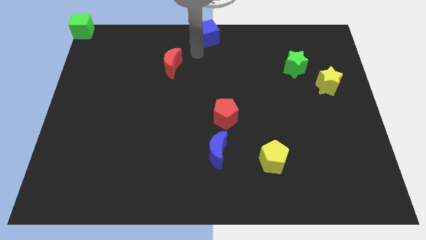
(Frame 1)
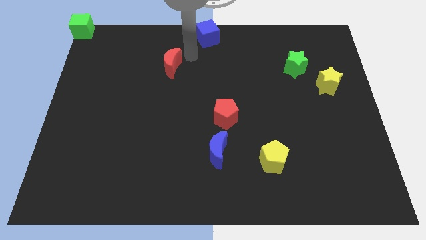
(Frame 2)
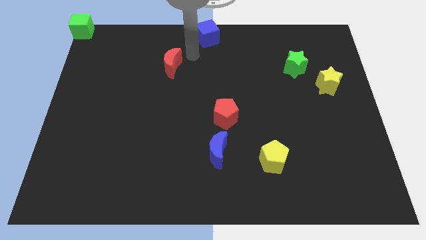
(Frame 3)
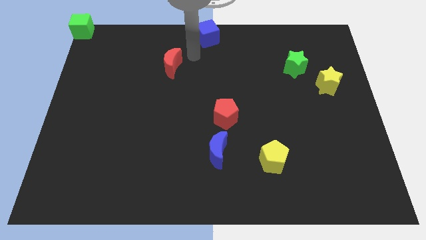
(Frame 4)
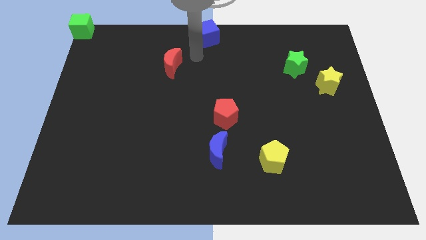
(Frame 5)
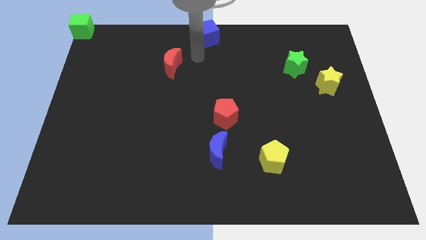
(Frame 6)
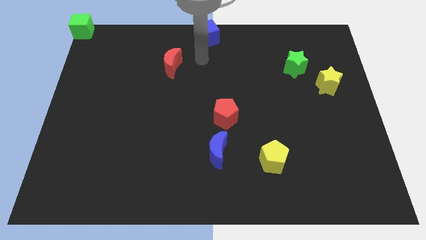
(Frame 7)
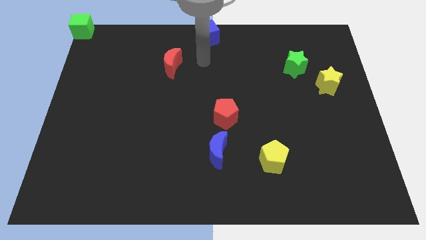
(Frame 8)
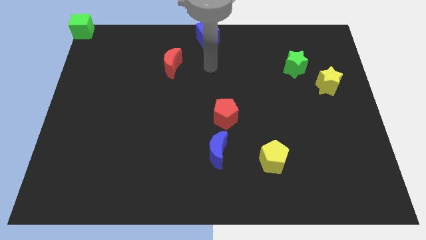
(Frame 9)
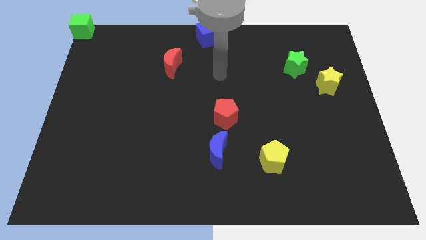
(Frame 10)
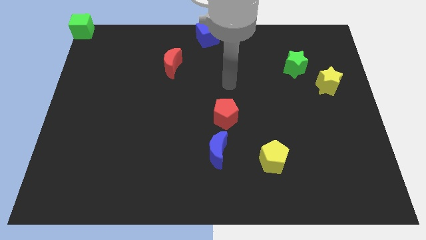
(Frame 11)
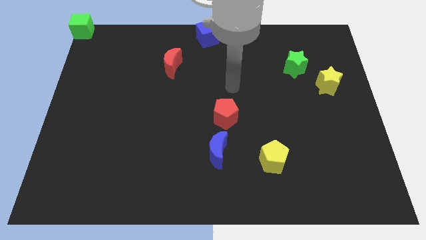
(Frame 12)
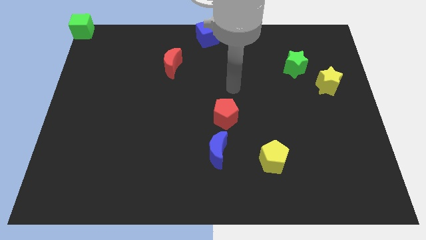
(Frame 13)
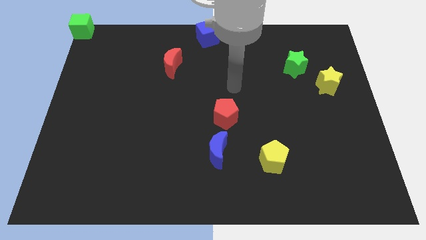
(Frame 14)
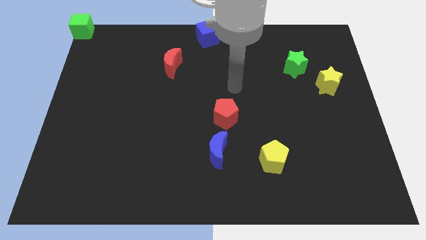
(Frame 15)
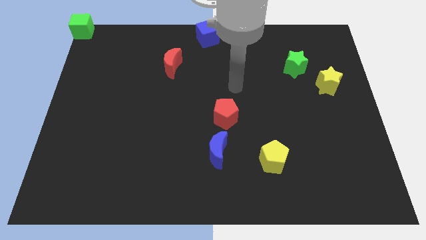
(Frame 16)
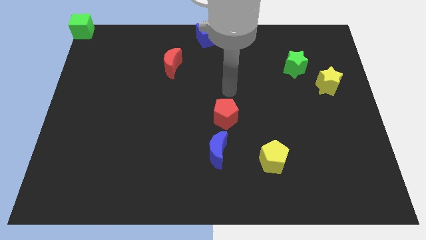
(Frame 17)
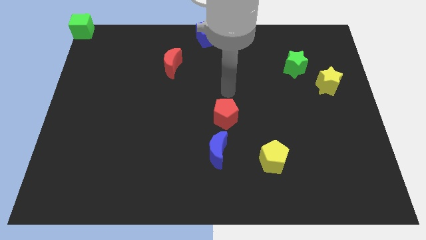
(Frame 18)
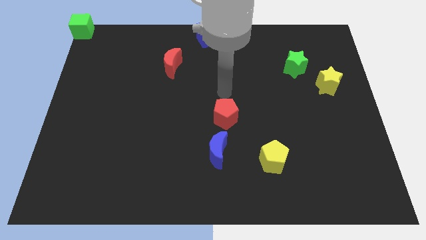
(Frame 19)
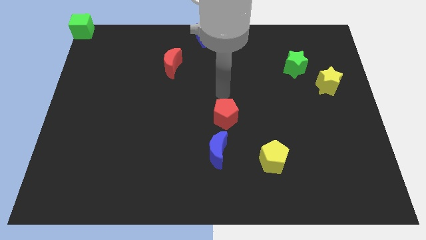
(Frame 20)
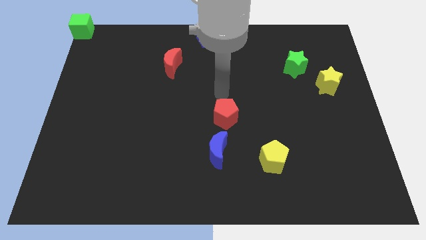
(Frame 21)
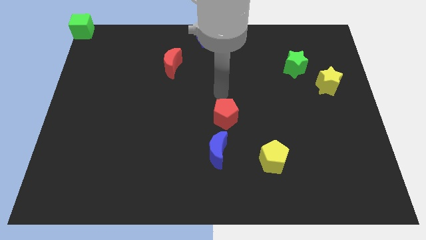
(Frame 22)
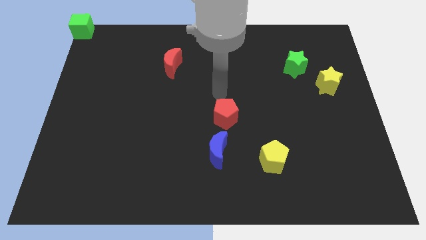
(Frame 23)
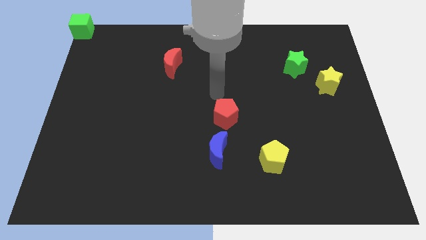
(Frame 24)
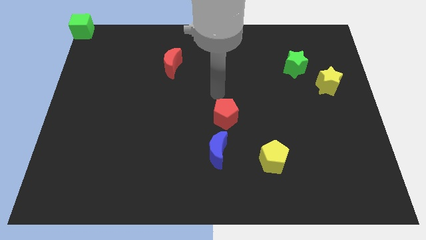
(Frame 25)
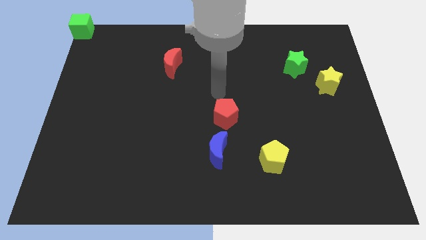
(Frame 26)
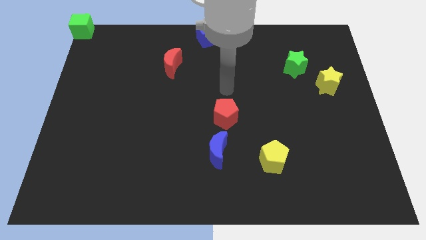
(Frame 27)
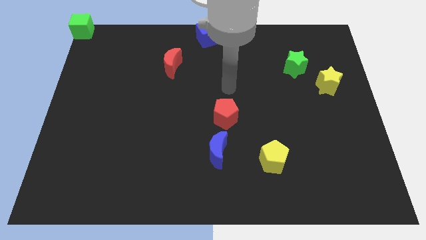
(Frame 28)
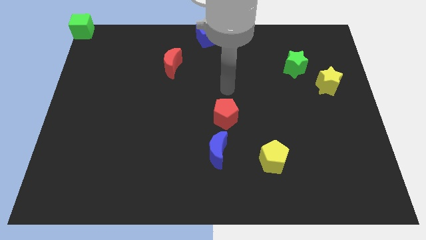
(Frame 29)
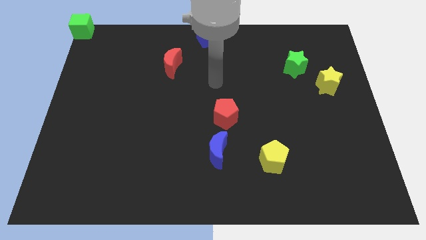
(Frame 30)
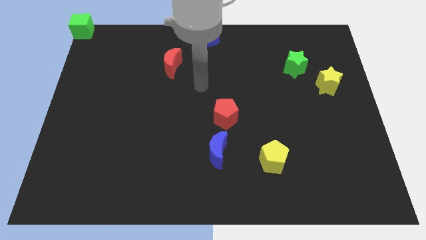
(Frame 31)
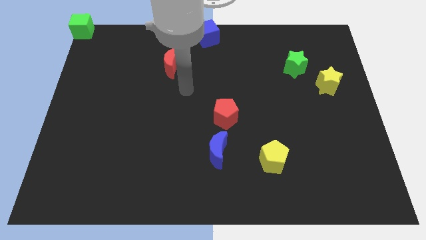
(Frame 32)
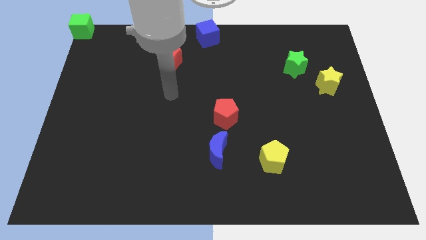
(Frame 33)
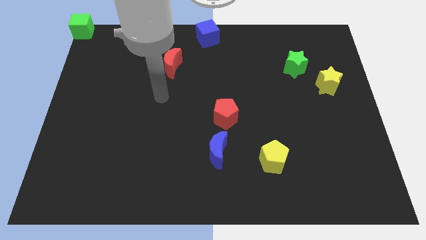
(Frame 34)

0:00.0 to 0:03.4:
move your hand vertically below the red moon

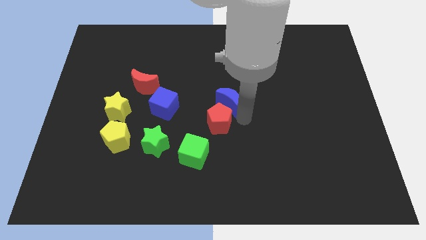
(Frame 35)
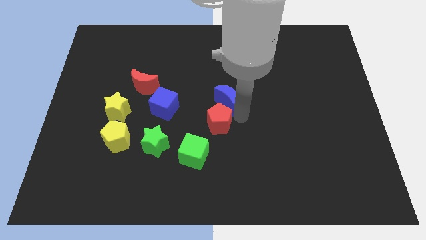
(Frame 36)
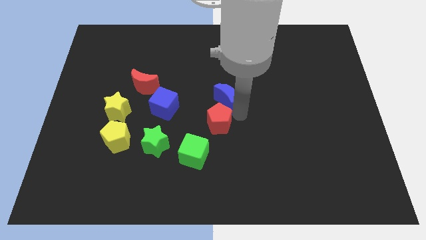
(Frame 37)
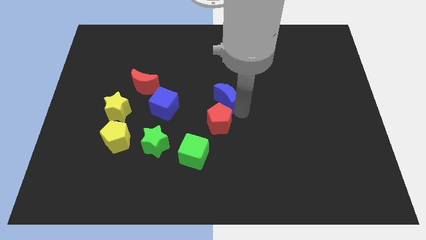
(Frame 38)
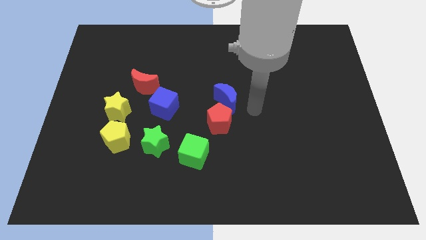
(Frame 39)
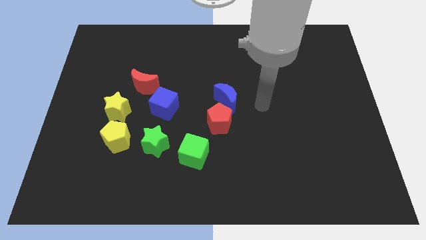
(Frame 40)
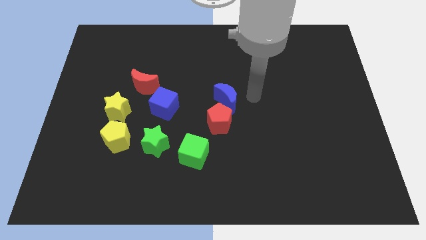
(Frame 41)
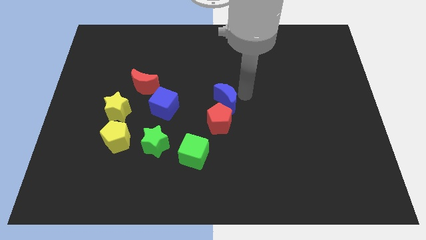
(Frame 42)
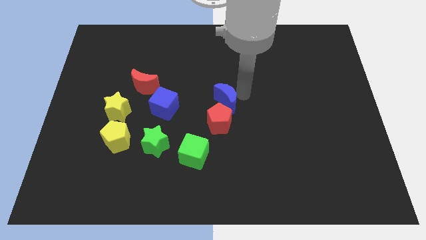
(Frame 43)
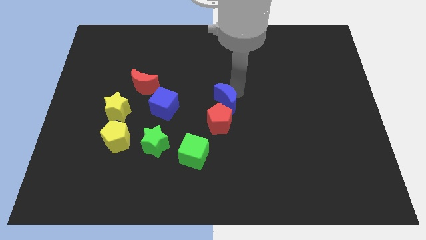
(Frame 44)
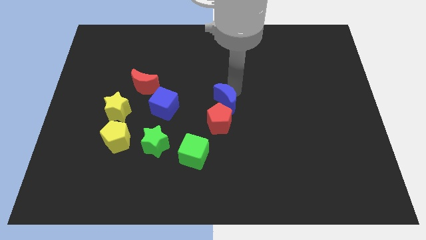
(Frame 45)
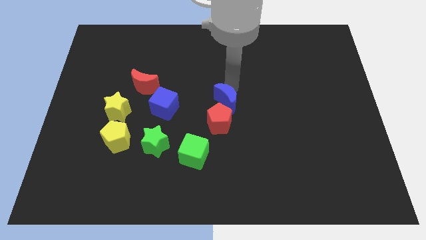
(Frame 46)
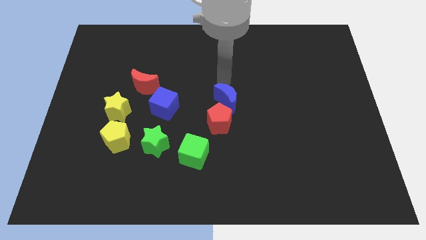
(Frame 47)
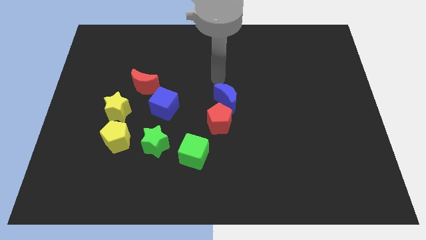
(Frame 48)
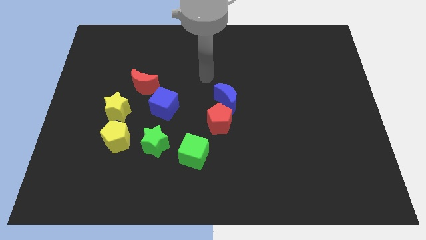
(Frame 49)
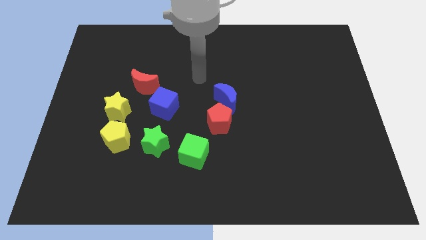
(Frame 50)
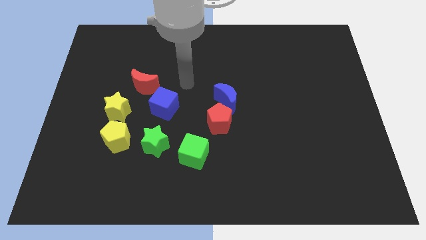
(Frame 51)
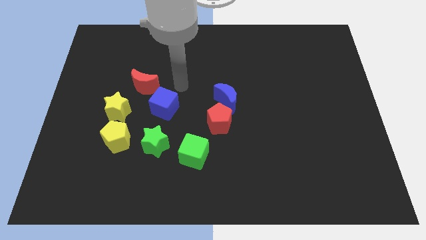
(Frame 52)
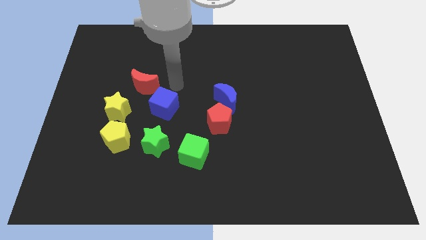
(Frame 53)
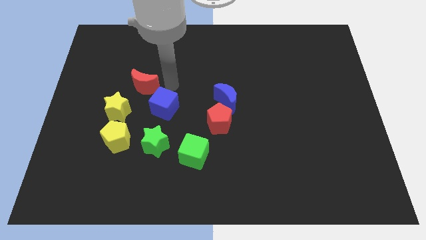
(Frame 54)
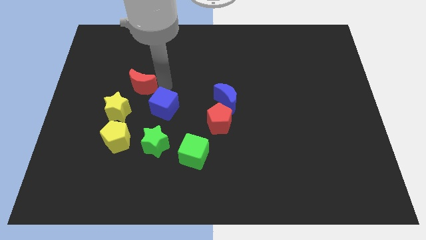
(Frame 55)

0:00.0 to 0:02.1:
slightly move the blue moon towards the top right side of the red pentagon

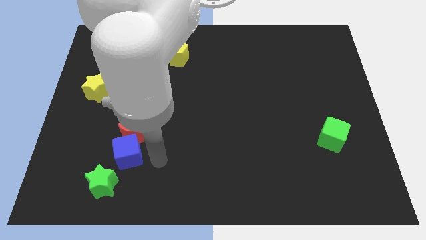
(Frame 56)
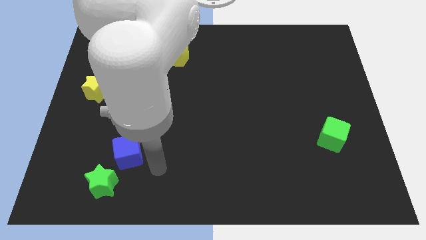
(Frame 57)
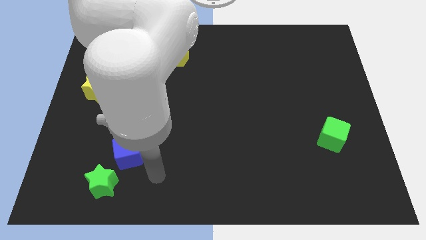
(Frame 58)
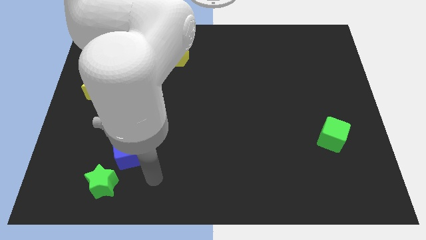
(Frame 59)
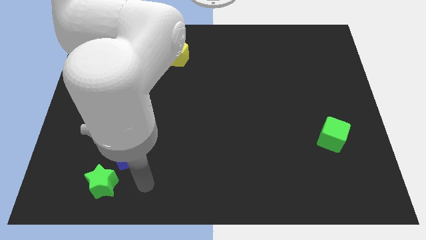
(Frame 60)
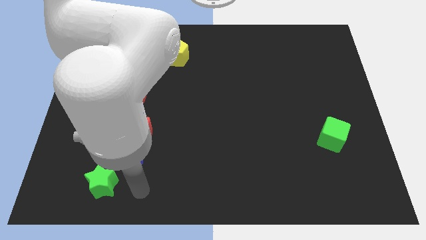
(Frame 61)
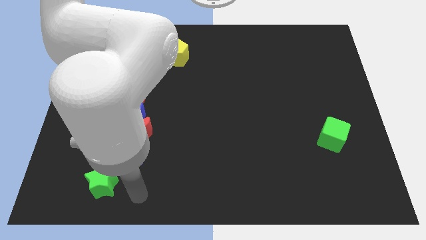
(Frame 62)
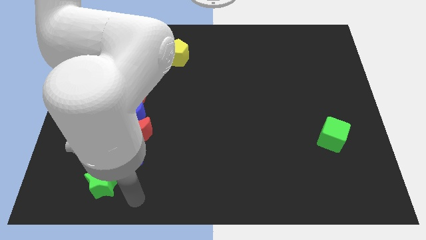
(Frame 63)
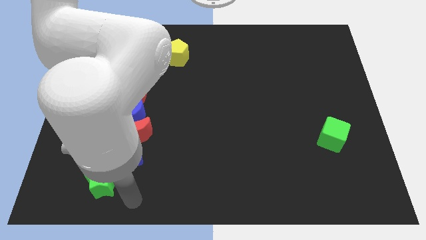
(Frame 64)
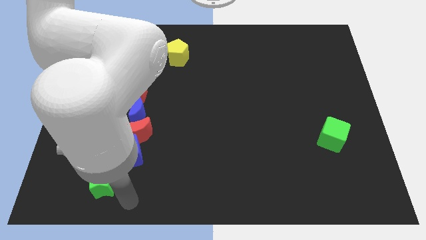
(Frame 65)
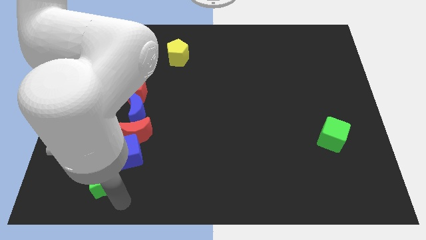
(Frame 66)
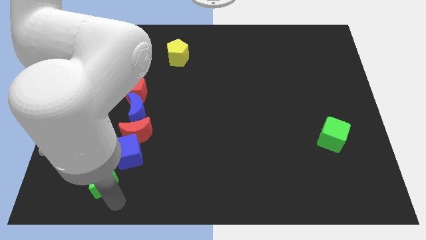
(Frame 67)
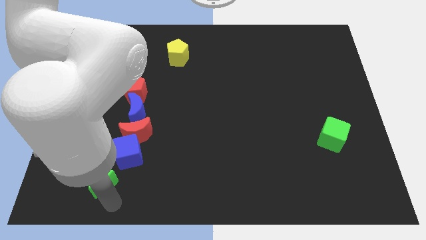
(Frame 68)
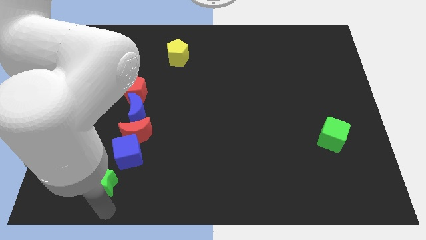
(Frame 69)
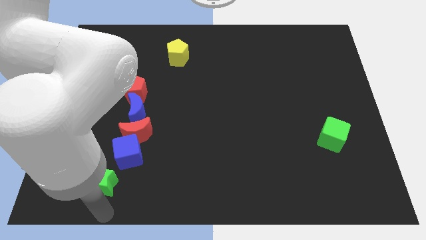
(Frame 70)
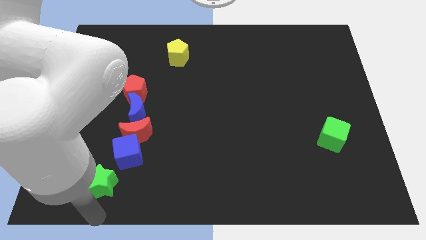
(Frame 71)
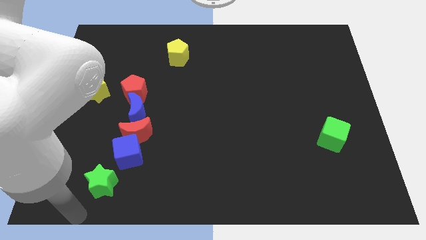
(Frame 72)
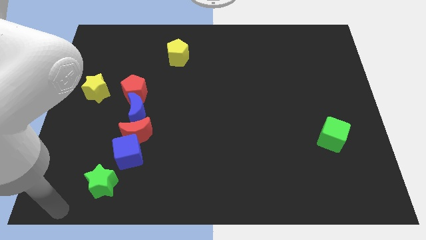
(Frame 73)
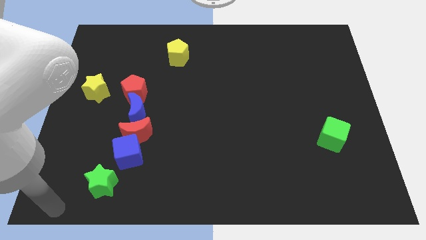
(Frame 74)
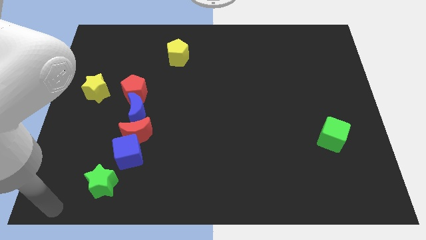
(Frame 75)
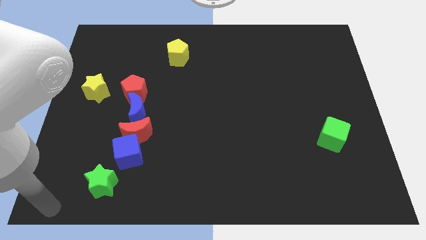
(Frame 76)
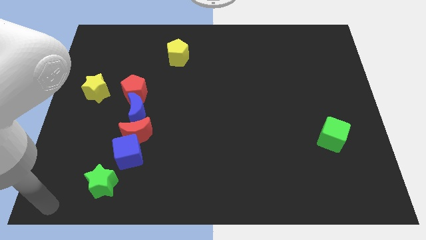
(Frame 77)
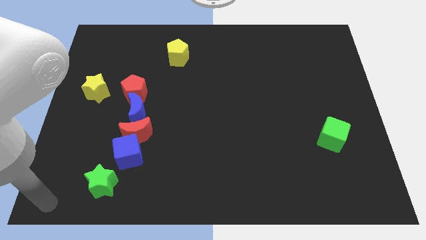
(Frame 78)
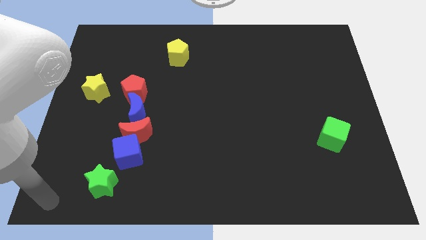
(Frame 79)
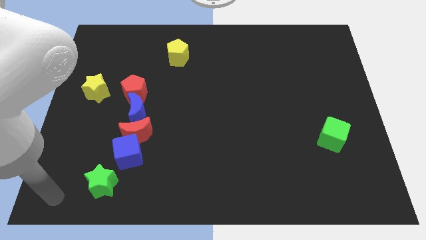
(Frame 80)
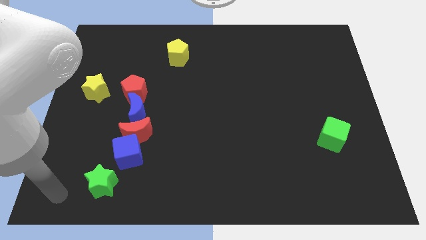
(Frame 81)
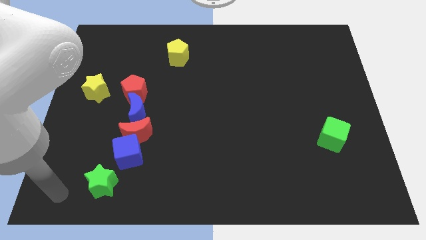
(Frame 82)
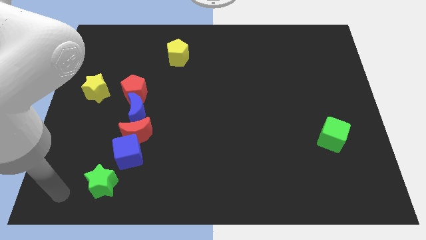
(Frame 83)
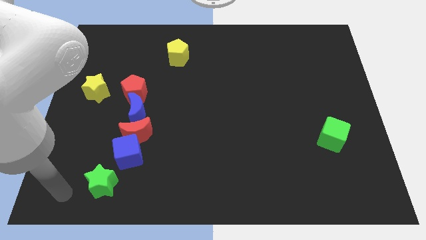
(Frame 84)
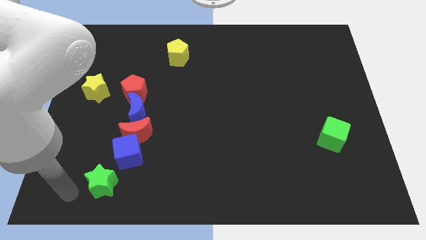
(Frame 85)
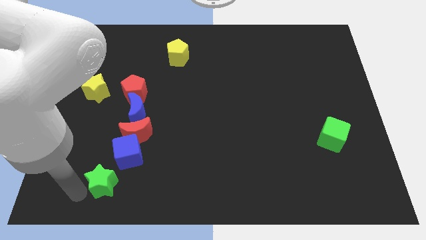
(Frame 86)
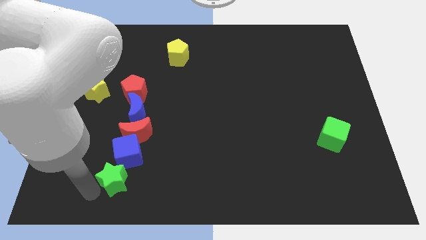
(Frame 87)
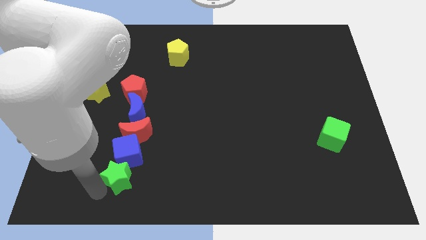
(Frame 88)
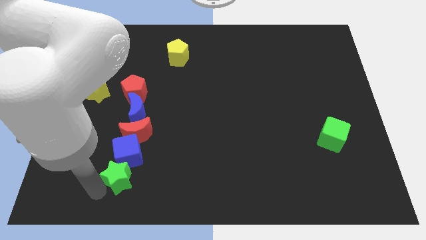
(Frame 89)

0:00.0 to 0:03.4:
tap the green star
